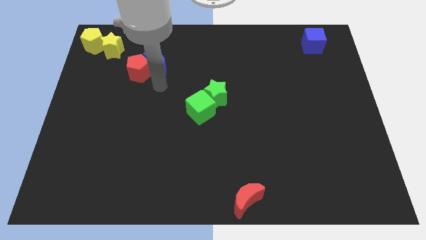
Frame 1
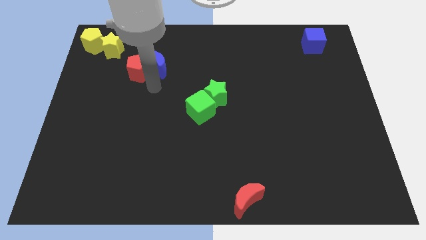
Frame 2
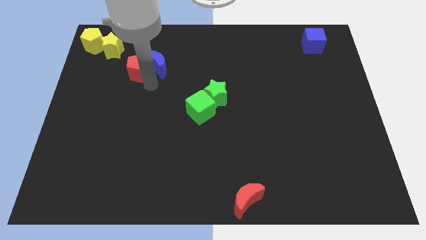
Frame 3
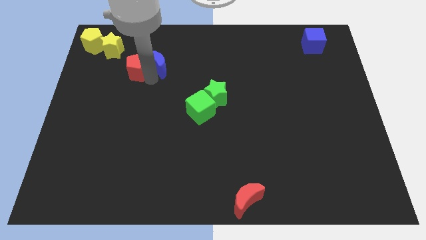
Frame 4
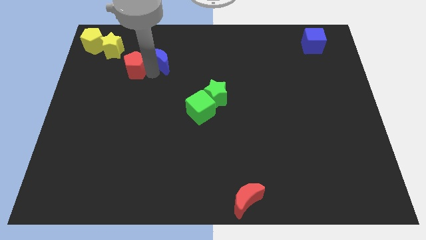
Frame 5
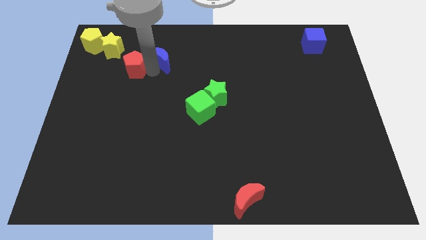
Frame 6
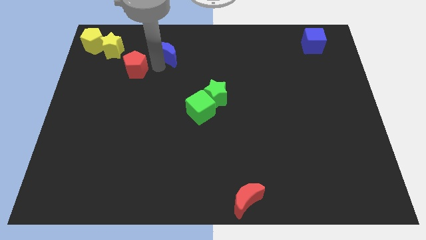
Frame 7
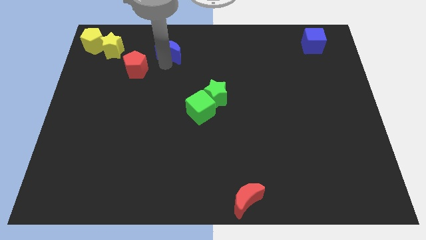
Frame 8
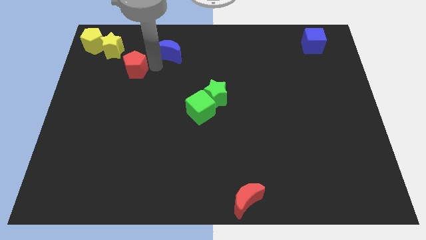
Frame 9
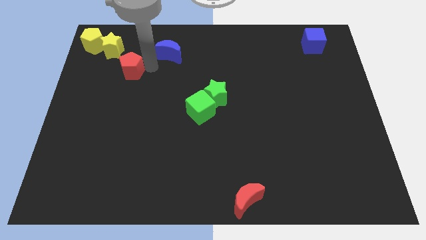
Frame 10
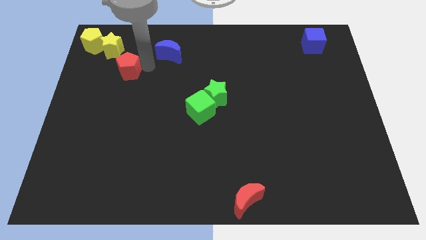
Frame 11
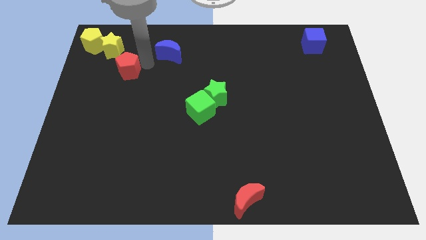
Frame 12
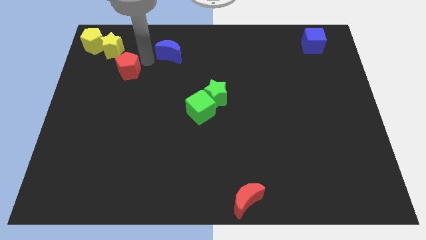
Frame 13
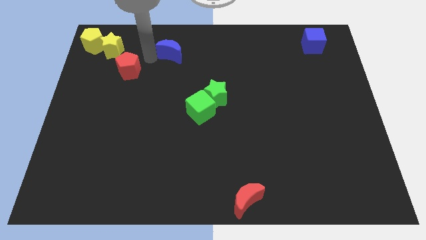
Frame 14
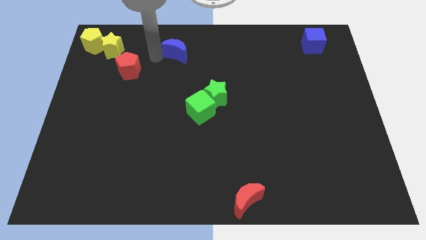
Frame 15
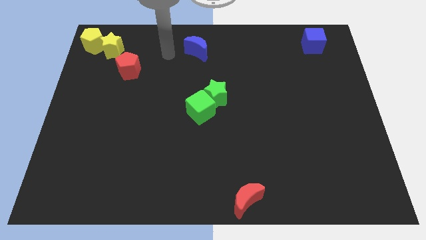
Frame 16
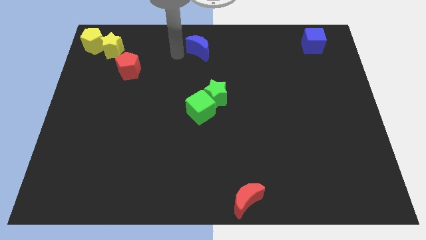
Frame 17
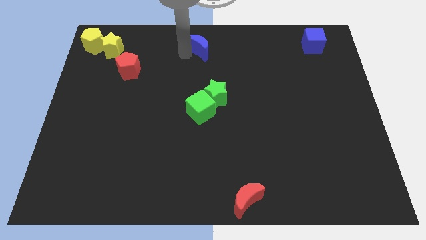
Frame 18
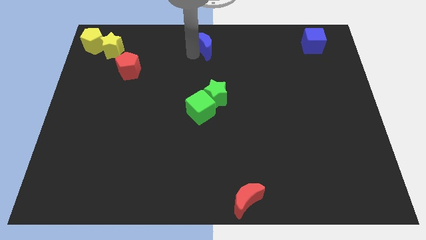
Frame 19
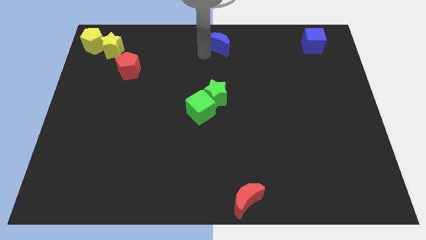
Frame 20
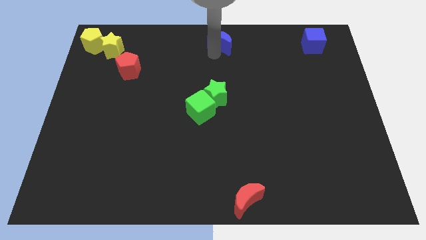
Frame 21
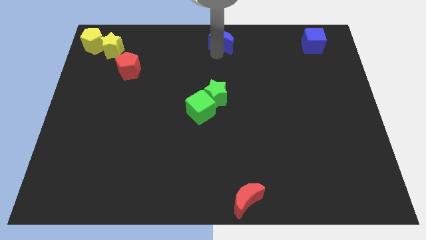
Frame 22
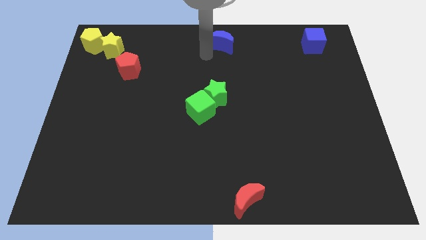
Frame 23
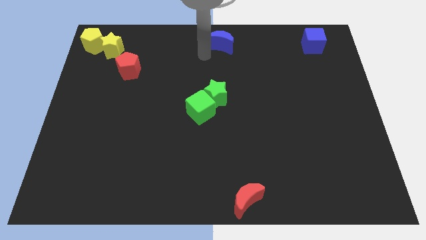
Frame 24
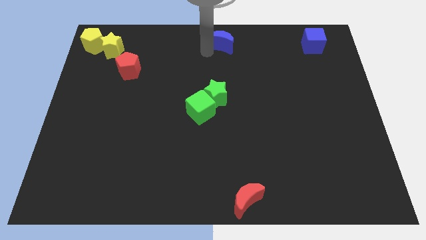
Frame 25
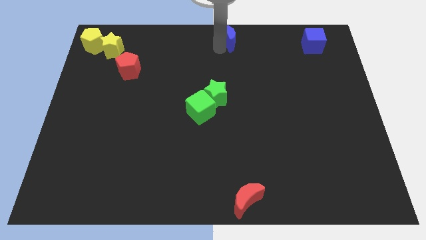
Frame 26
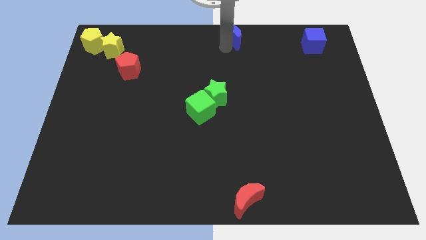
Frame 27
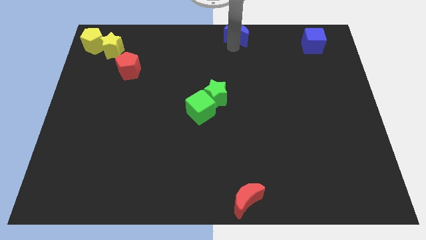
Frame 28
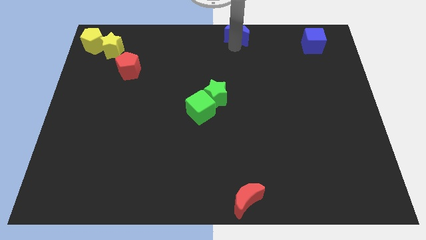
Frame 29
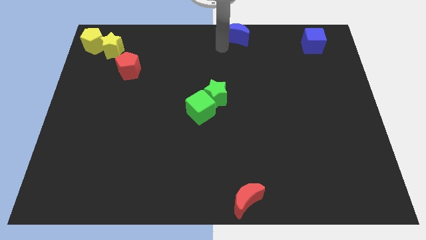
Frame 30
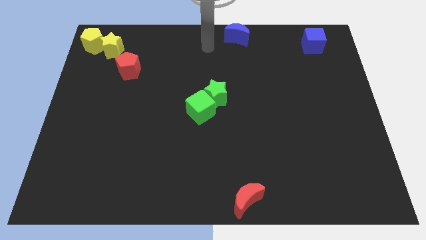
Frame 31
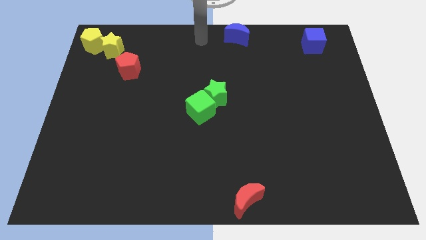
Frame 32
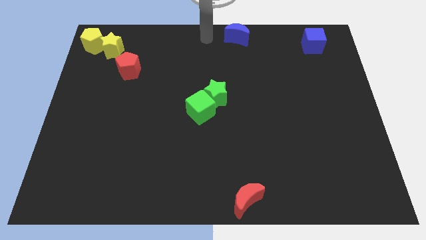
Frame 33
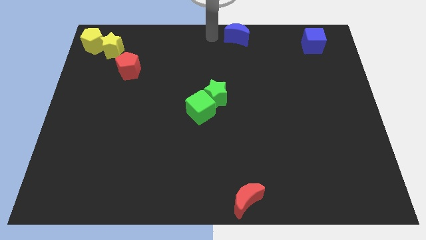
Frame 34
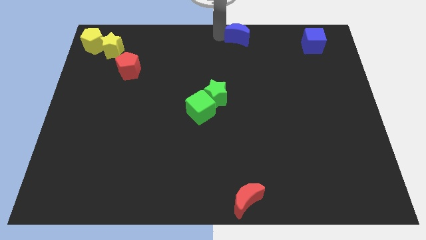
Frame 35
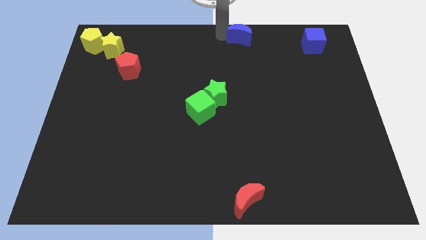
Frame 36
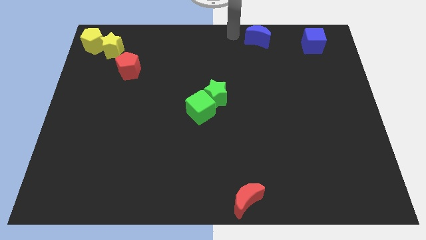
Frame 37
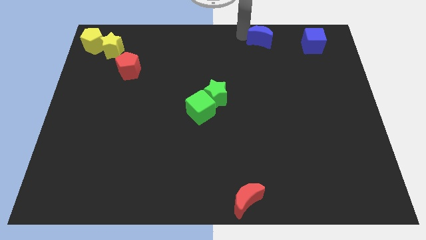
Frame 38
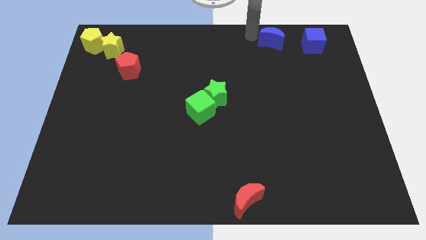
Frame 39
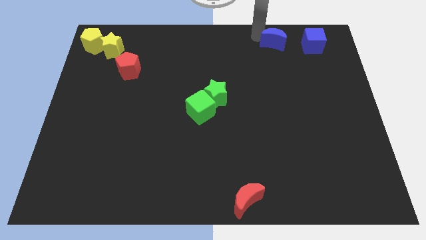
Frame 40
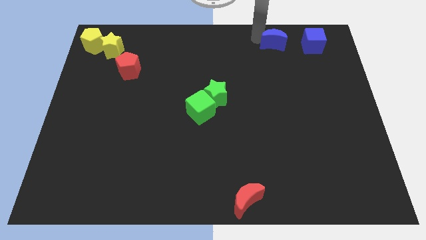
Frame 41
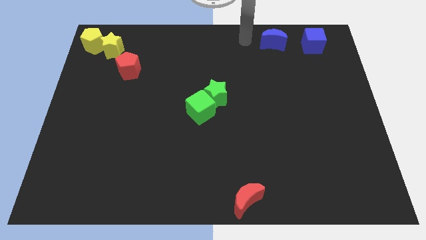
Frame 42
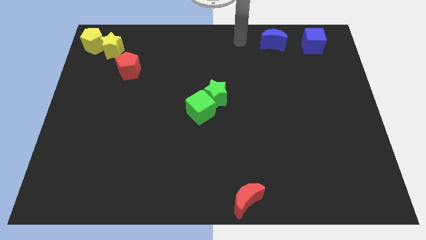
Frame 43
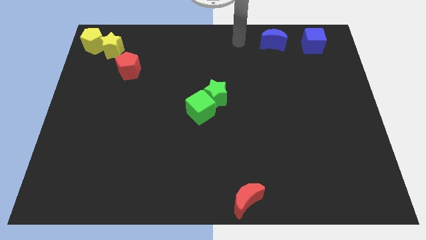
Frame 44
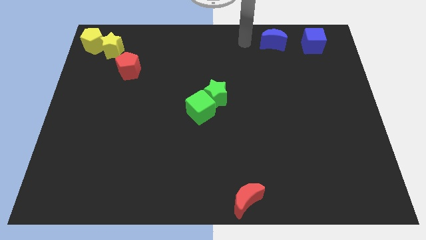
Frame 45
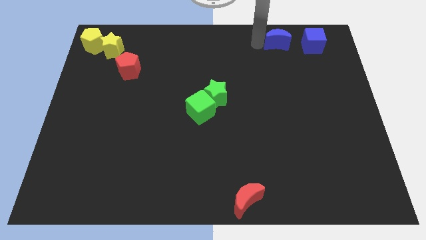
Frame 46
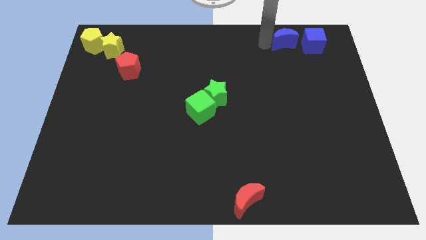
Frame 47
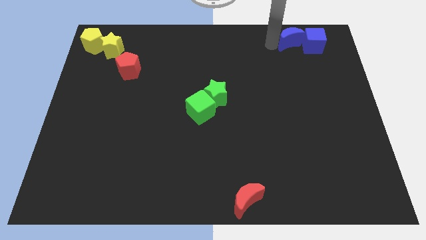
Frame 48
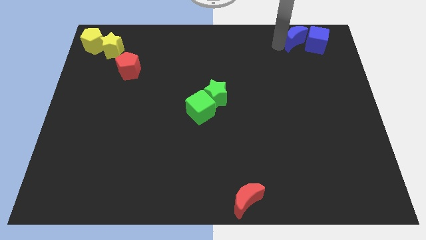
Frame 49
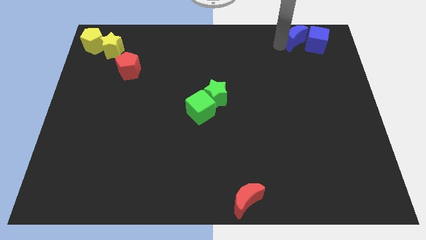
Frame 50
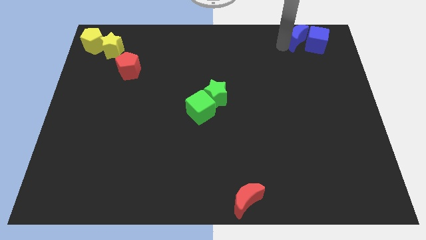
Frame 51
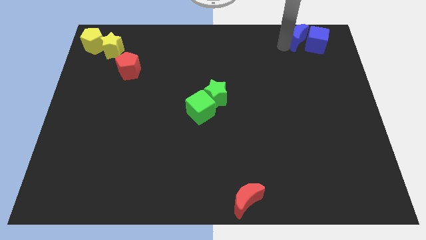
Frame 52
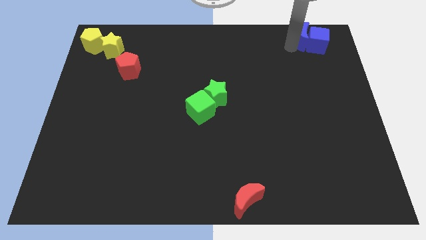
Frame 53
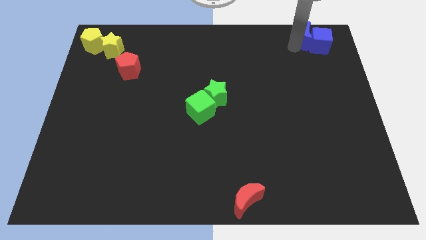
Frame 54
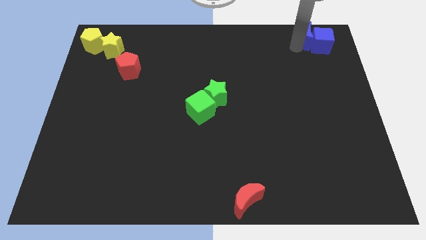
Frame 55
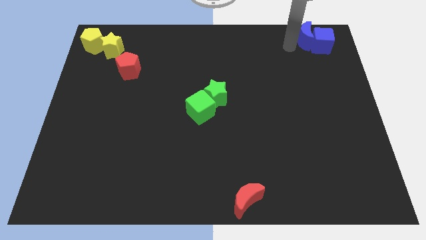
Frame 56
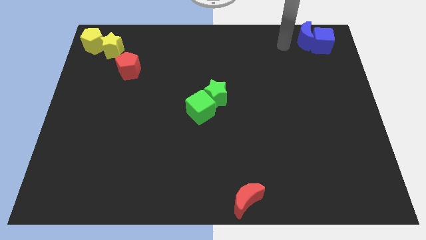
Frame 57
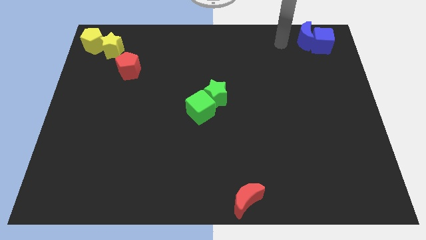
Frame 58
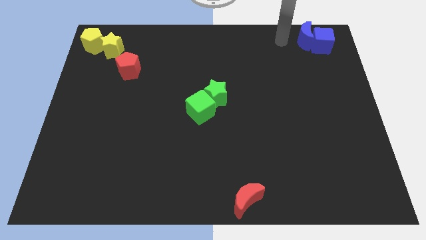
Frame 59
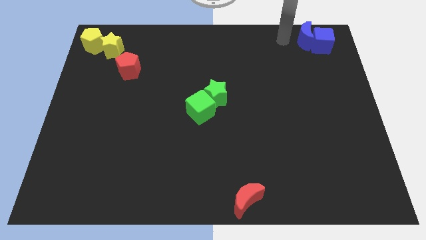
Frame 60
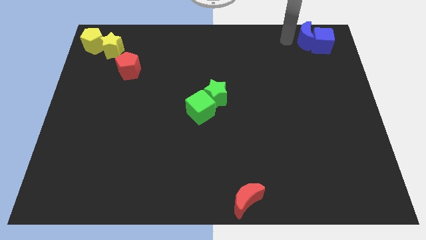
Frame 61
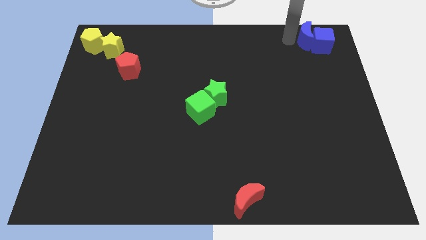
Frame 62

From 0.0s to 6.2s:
move blue moon into the blue cube

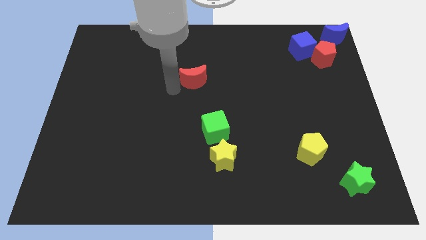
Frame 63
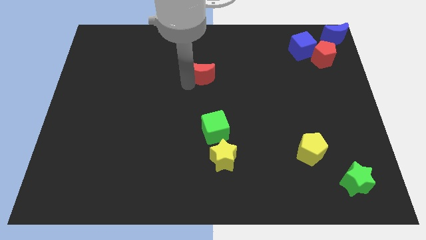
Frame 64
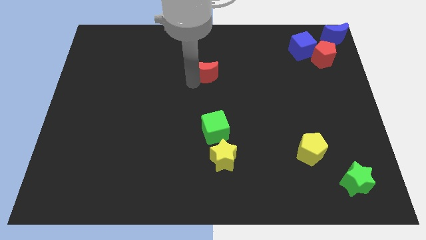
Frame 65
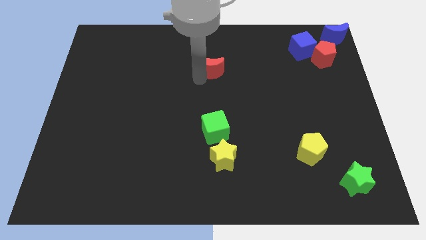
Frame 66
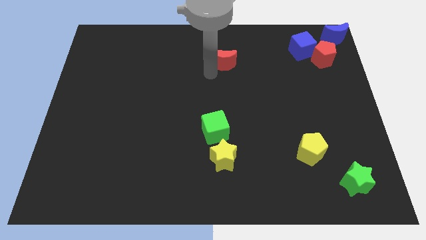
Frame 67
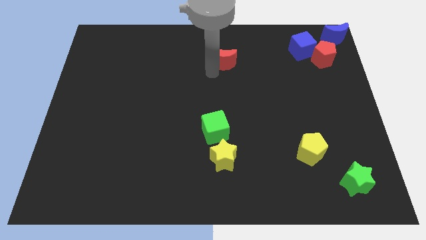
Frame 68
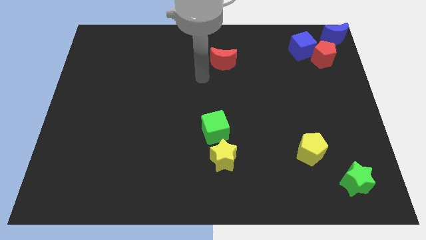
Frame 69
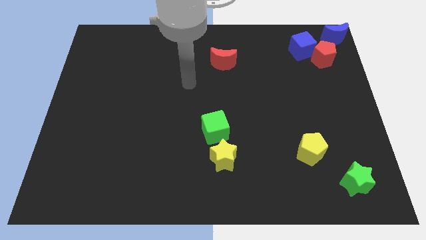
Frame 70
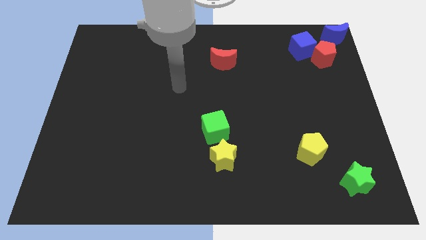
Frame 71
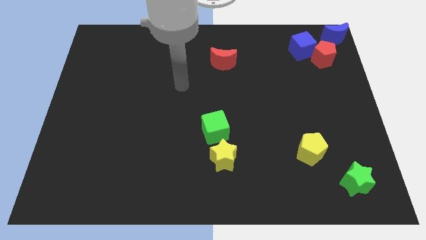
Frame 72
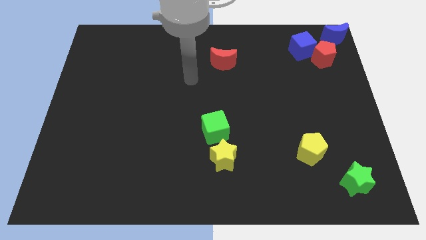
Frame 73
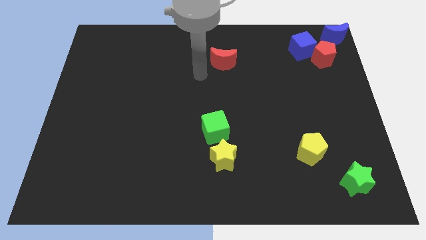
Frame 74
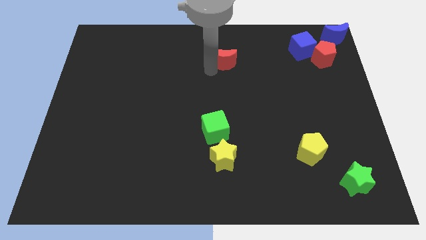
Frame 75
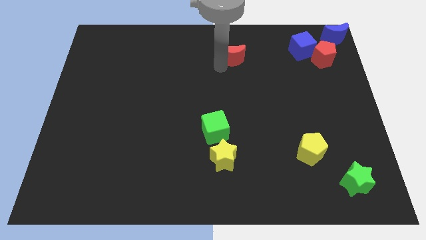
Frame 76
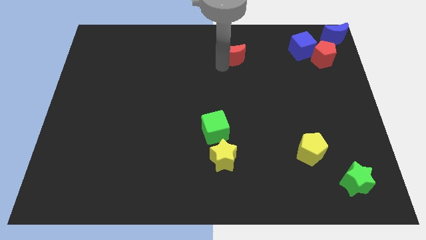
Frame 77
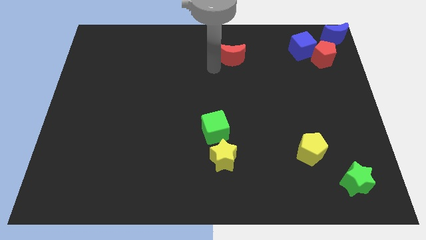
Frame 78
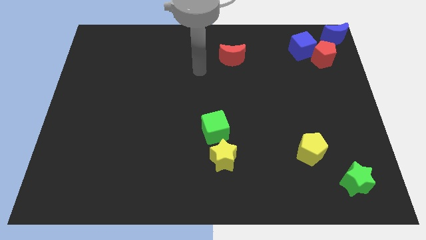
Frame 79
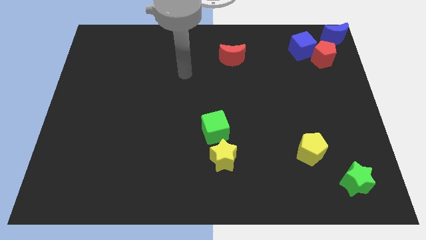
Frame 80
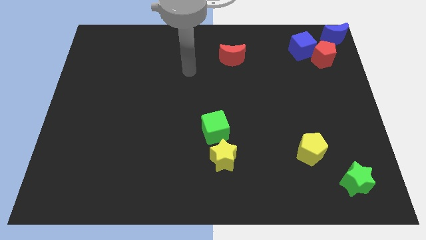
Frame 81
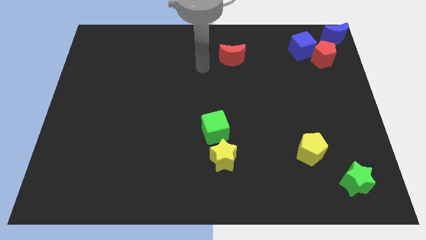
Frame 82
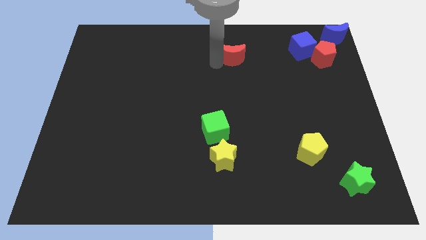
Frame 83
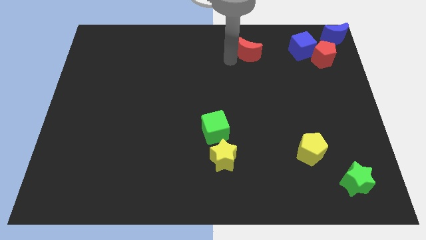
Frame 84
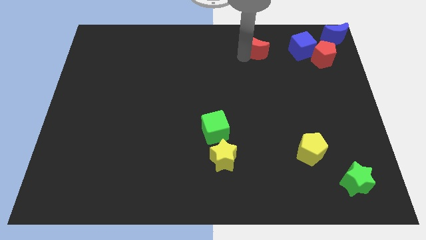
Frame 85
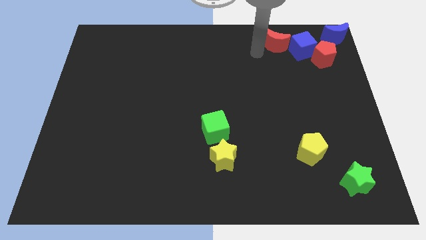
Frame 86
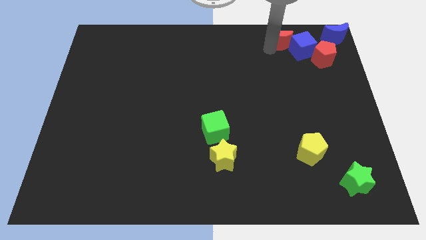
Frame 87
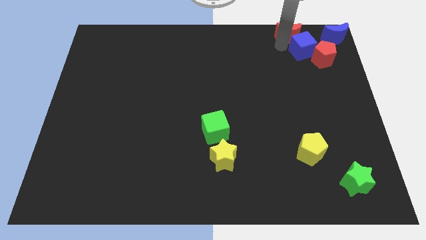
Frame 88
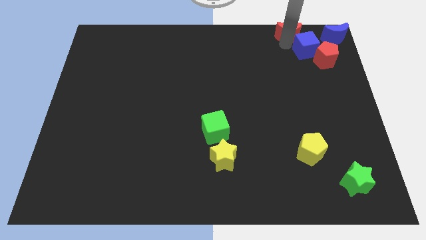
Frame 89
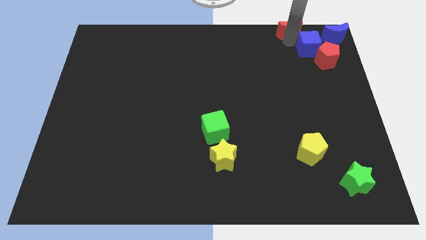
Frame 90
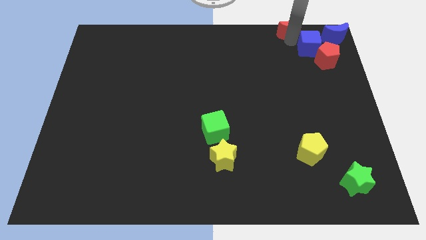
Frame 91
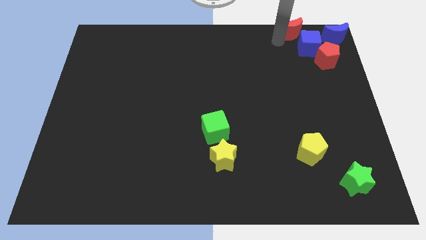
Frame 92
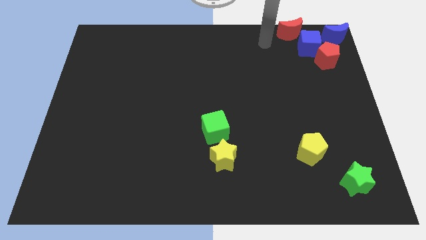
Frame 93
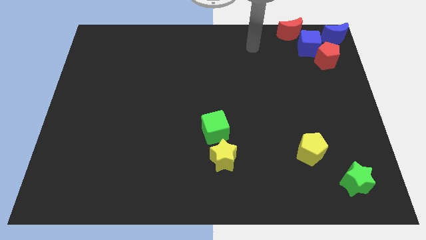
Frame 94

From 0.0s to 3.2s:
place the red crescent to the top left side of the blue cube
